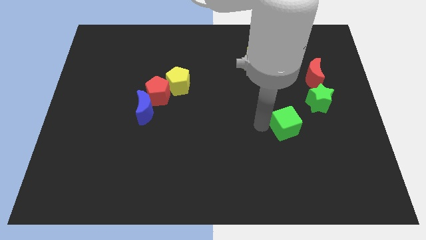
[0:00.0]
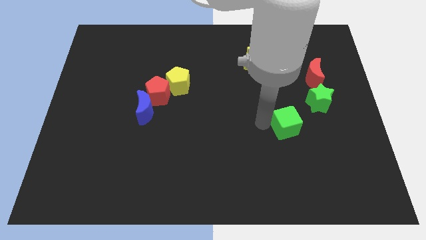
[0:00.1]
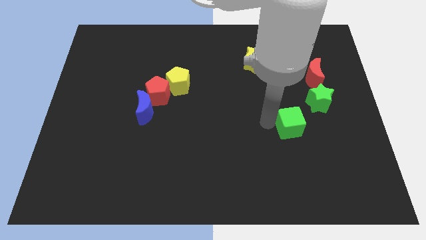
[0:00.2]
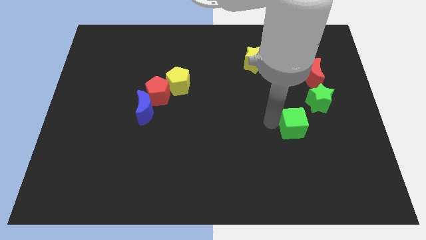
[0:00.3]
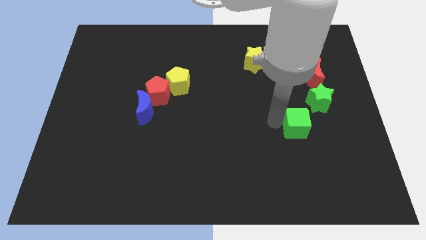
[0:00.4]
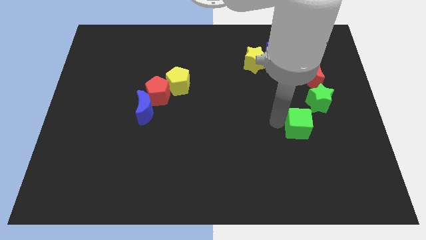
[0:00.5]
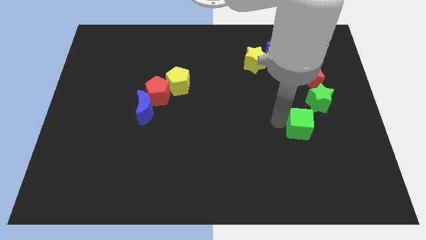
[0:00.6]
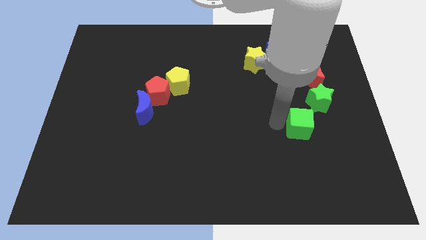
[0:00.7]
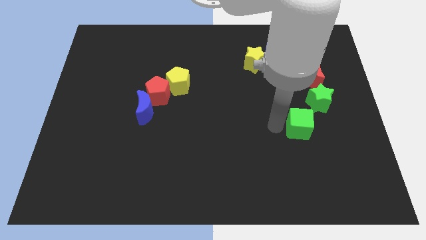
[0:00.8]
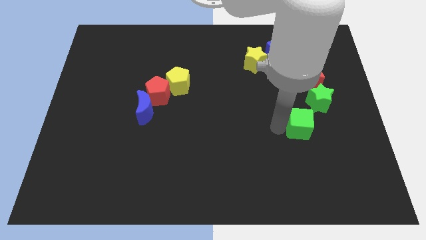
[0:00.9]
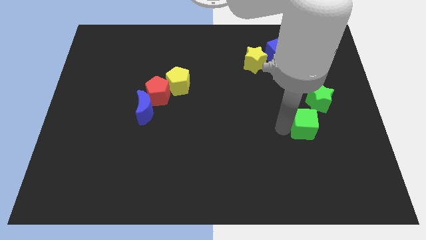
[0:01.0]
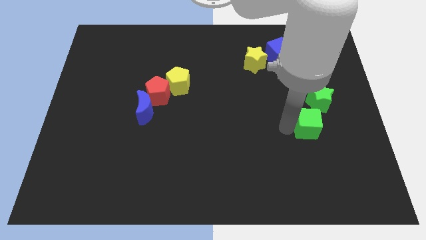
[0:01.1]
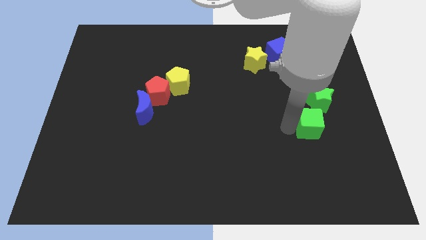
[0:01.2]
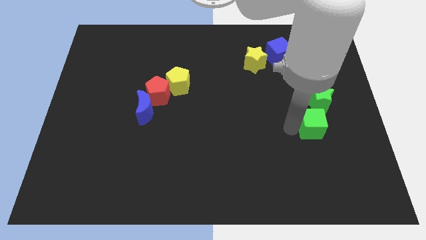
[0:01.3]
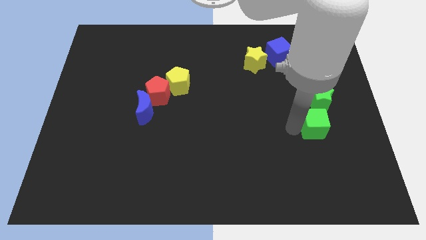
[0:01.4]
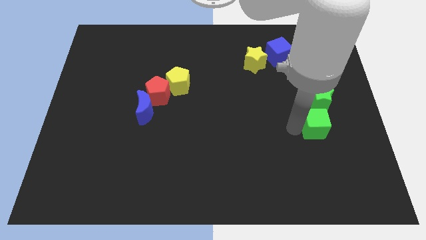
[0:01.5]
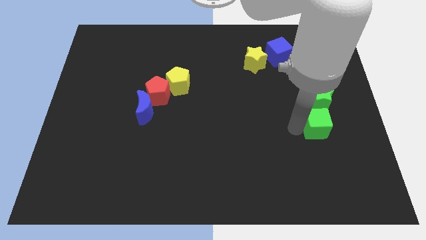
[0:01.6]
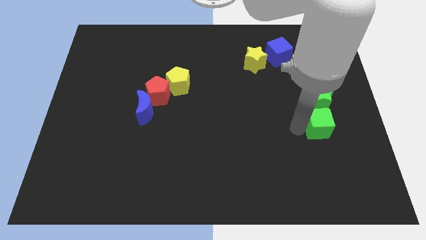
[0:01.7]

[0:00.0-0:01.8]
move the green cube to the bottom of the green star

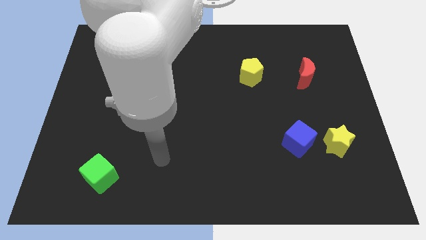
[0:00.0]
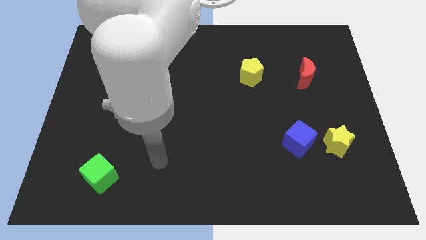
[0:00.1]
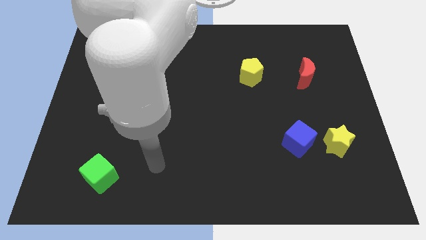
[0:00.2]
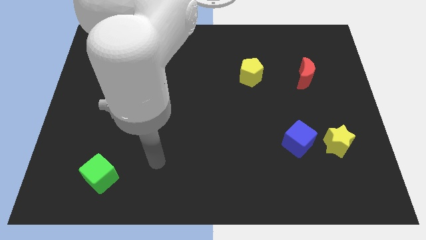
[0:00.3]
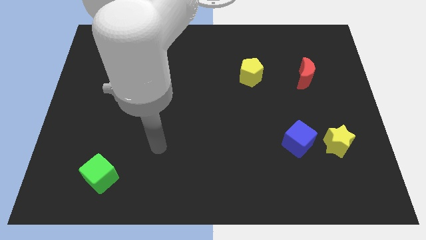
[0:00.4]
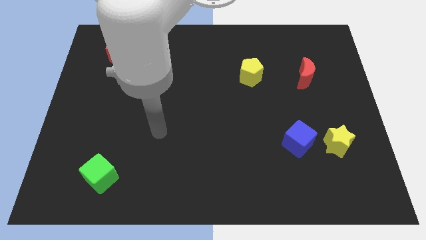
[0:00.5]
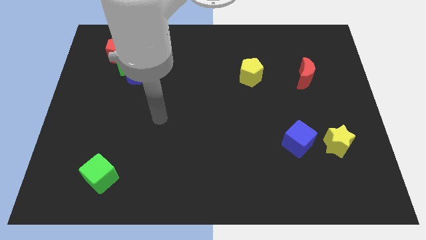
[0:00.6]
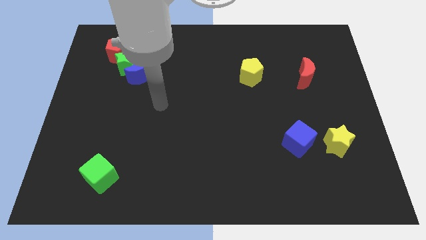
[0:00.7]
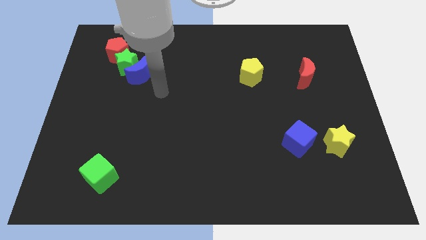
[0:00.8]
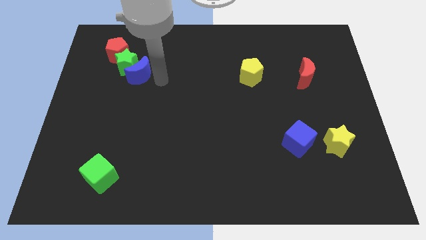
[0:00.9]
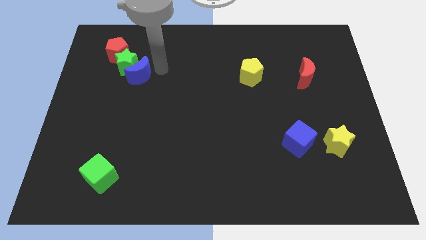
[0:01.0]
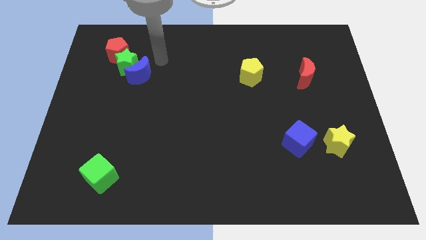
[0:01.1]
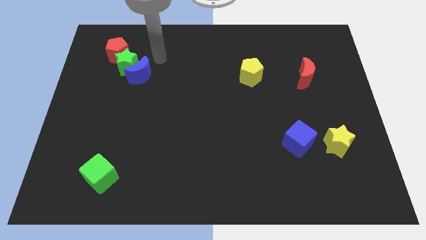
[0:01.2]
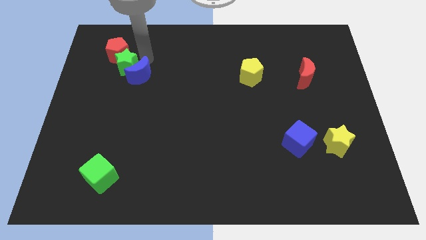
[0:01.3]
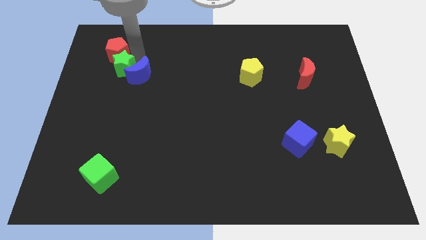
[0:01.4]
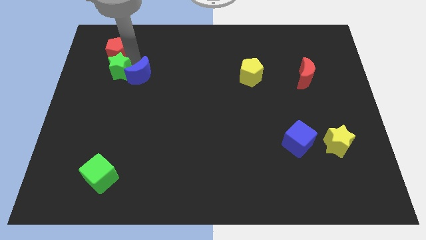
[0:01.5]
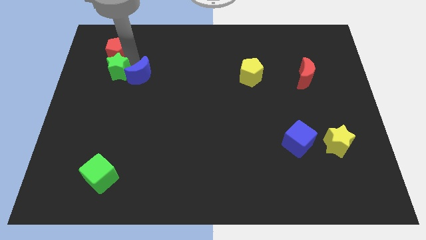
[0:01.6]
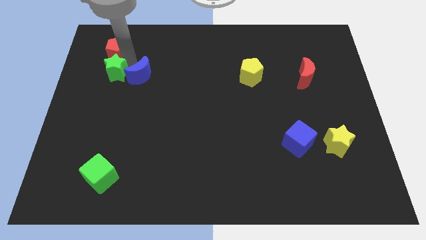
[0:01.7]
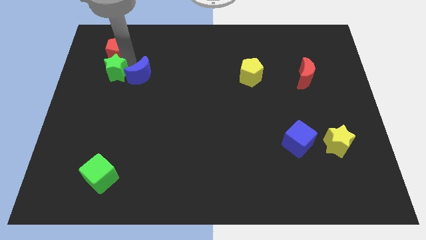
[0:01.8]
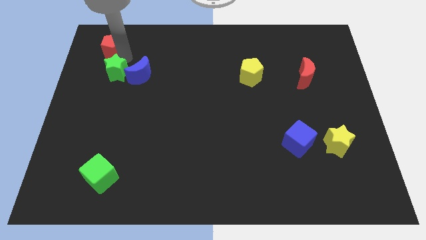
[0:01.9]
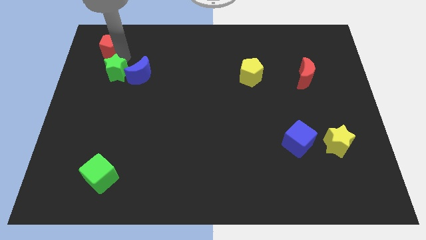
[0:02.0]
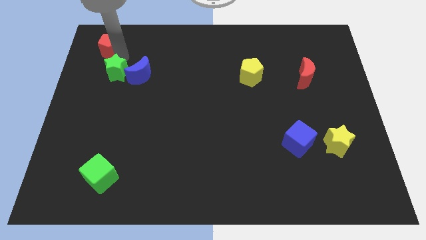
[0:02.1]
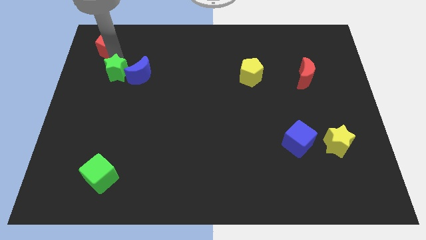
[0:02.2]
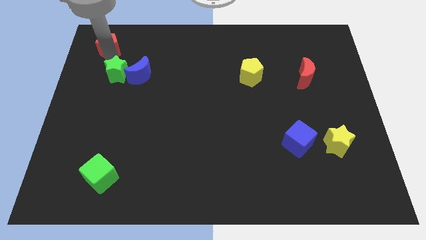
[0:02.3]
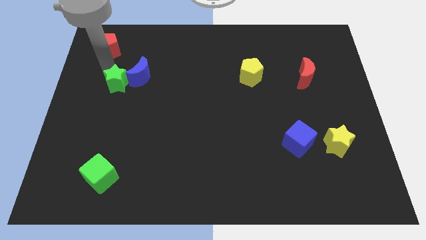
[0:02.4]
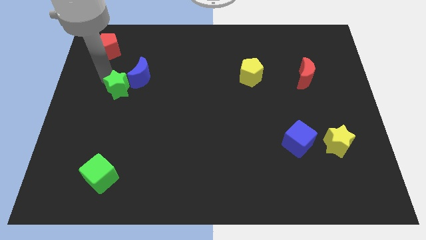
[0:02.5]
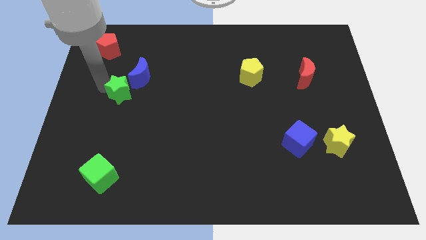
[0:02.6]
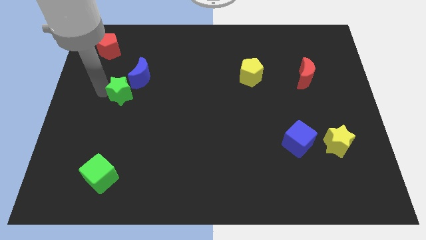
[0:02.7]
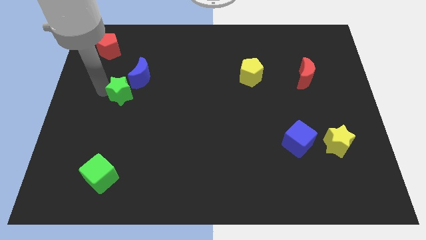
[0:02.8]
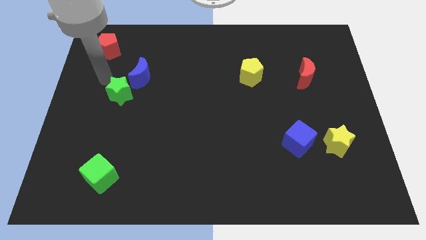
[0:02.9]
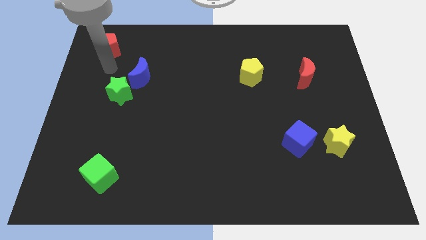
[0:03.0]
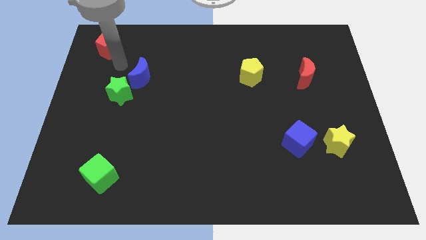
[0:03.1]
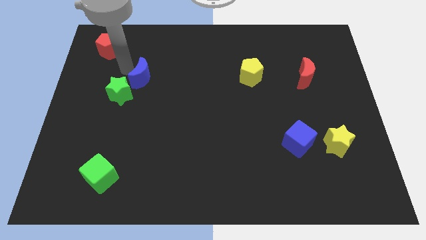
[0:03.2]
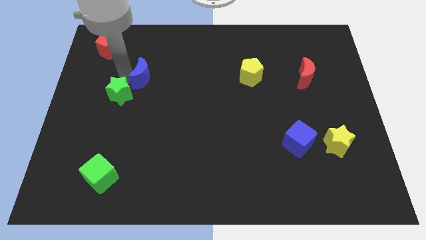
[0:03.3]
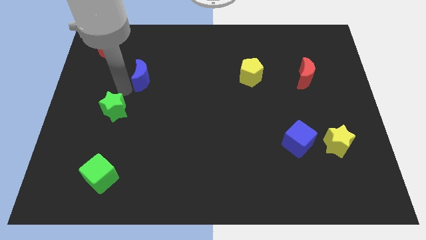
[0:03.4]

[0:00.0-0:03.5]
separate green star from the red pentagon

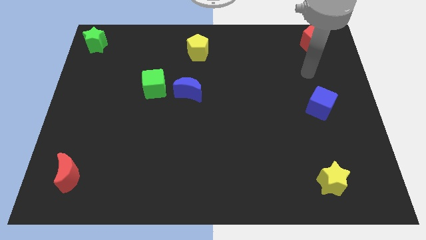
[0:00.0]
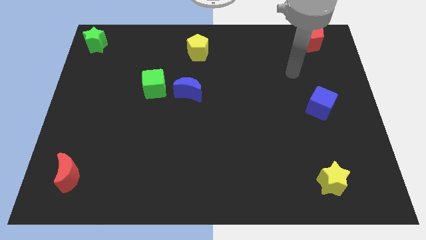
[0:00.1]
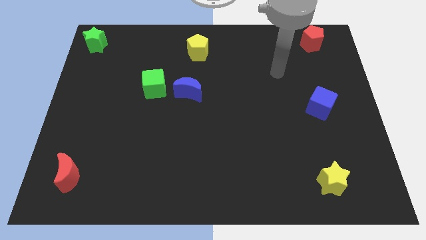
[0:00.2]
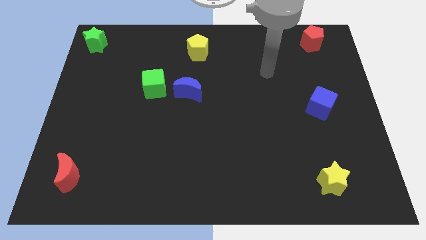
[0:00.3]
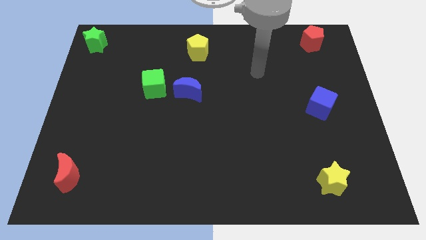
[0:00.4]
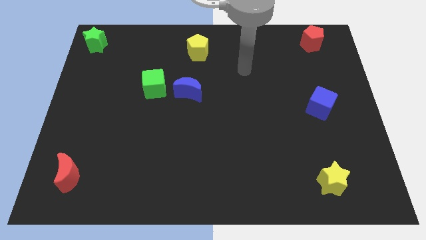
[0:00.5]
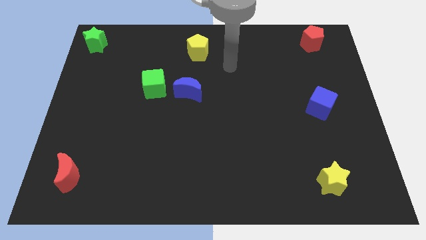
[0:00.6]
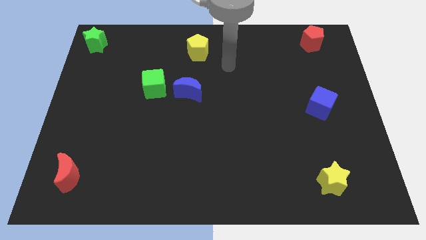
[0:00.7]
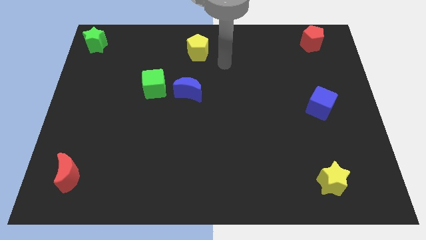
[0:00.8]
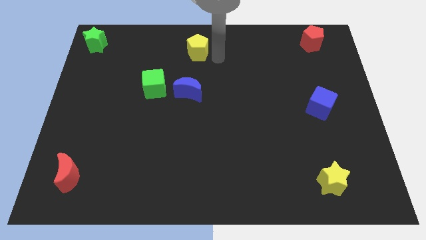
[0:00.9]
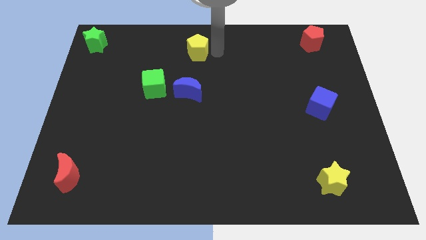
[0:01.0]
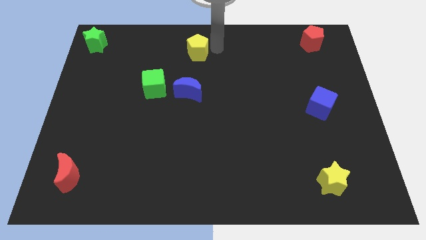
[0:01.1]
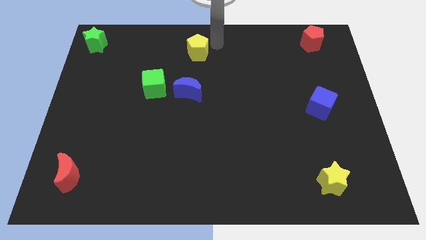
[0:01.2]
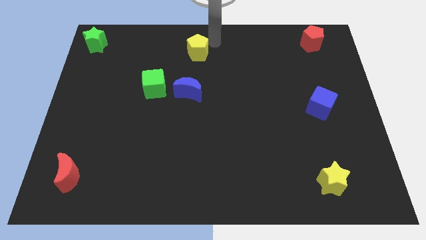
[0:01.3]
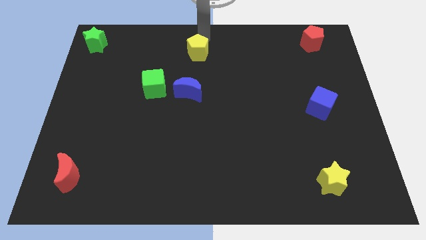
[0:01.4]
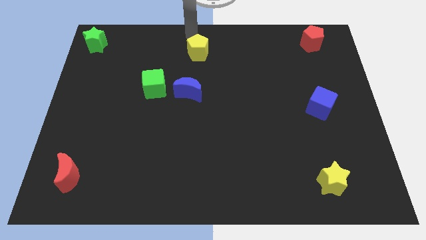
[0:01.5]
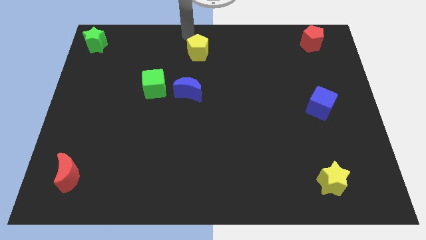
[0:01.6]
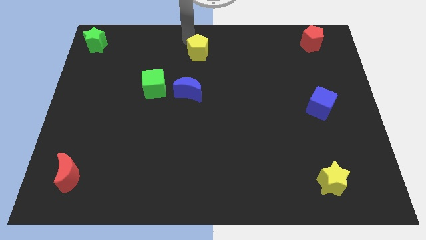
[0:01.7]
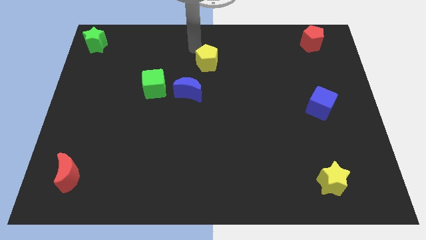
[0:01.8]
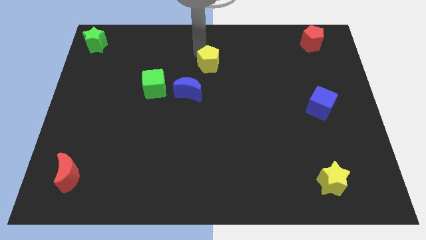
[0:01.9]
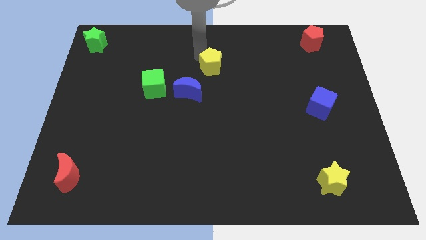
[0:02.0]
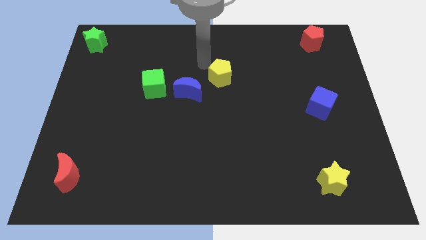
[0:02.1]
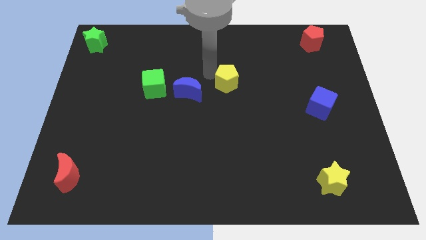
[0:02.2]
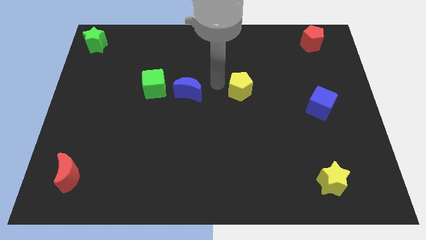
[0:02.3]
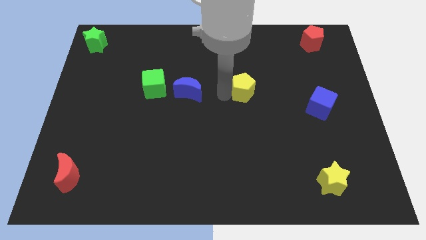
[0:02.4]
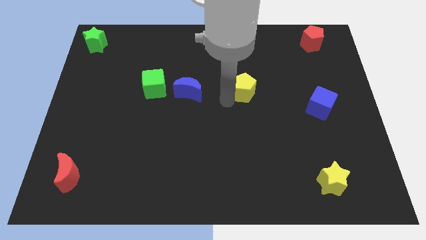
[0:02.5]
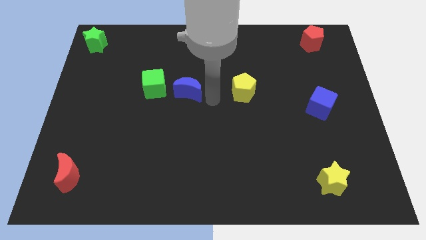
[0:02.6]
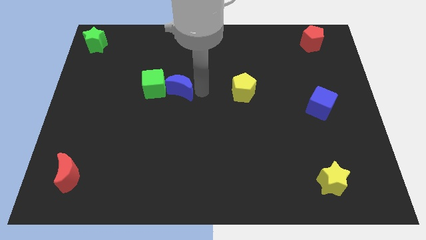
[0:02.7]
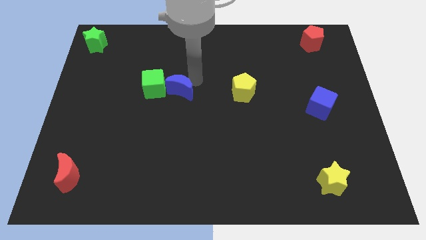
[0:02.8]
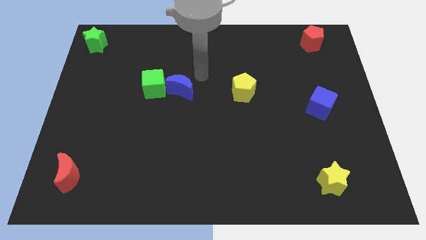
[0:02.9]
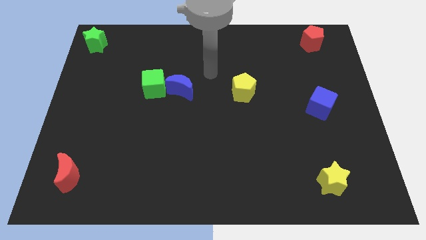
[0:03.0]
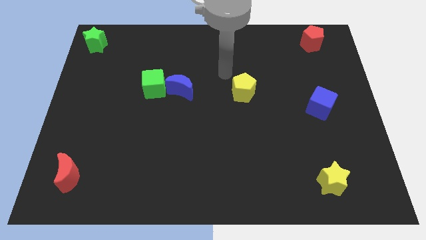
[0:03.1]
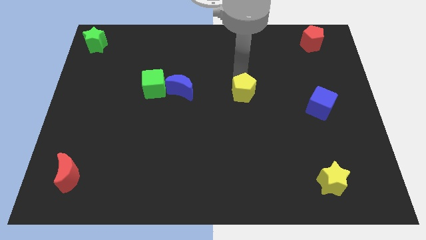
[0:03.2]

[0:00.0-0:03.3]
push the yellow pentagon diagonal to the right of blue crescent

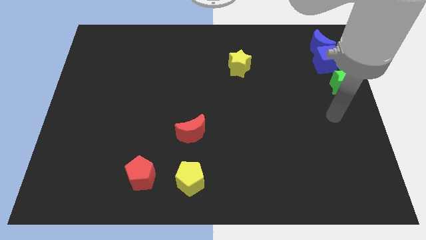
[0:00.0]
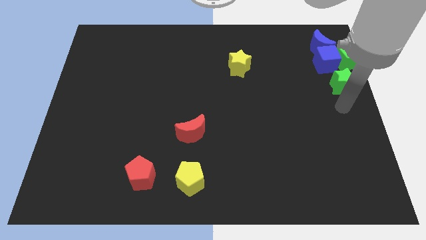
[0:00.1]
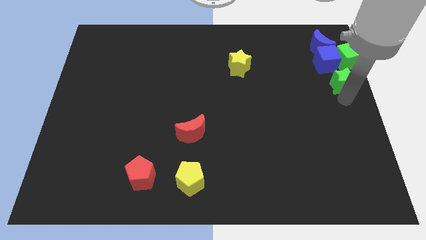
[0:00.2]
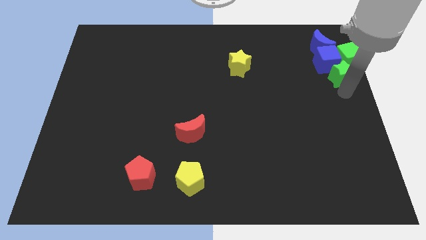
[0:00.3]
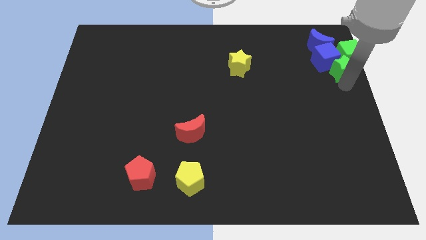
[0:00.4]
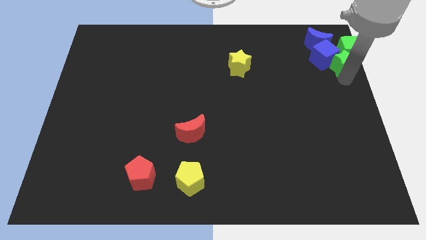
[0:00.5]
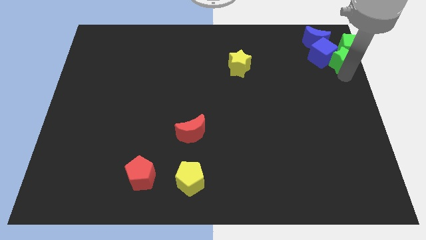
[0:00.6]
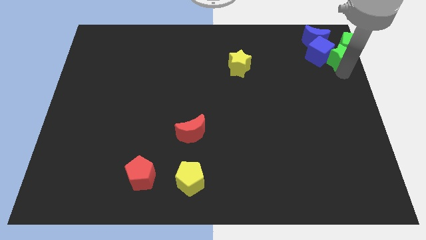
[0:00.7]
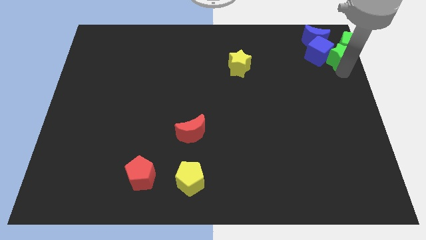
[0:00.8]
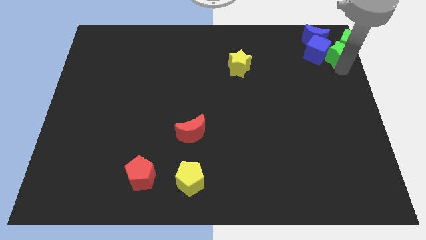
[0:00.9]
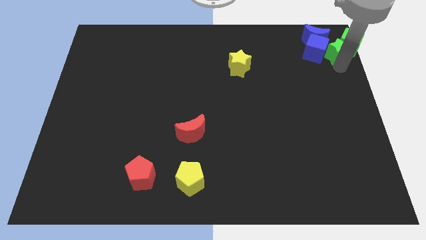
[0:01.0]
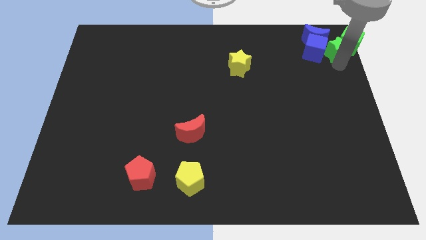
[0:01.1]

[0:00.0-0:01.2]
move the green star into the green cube
